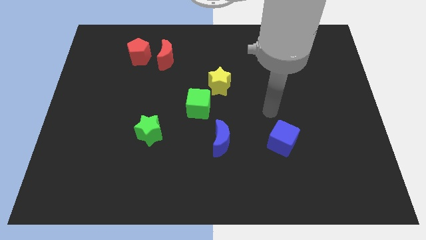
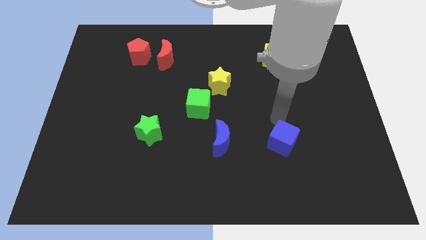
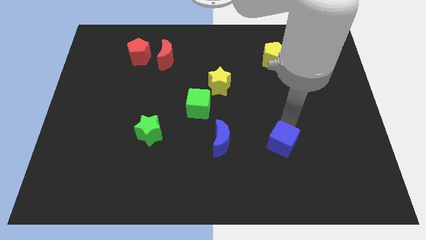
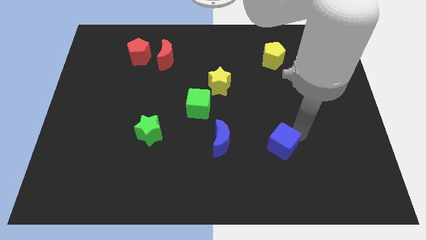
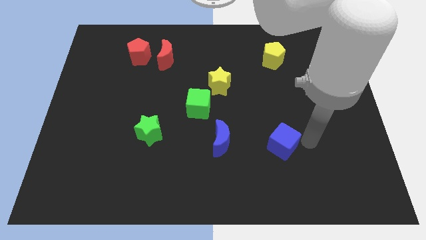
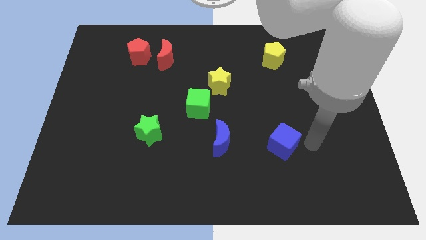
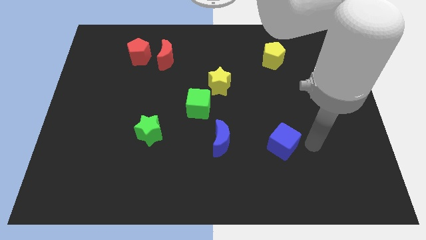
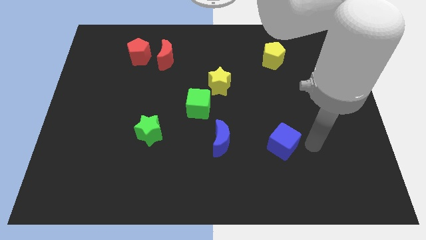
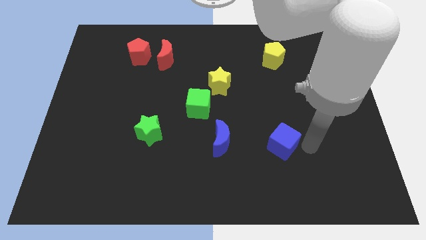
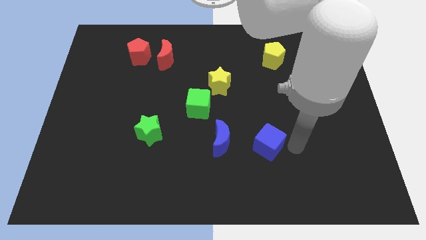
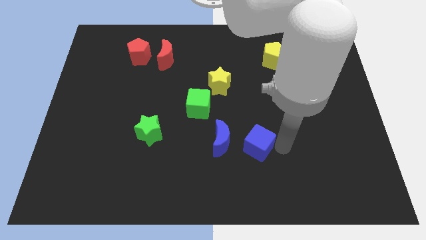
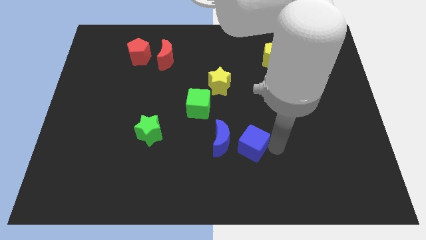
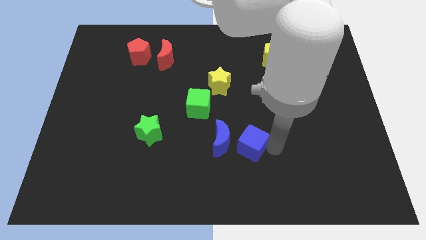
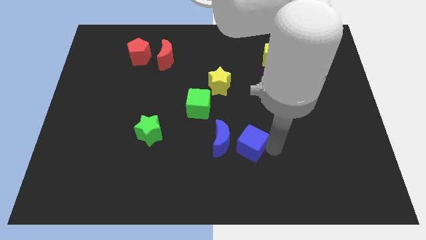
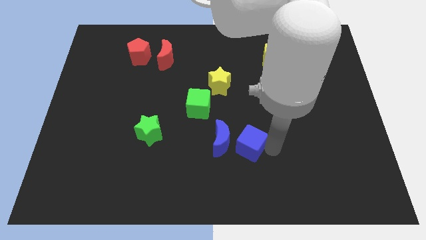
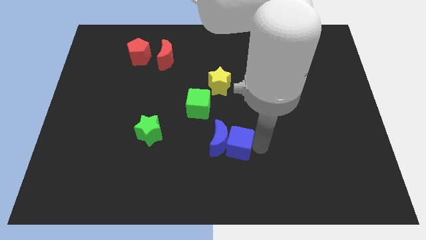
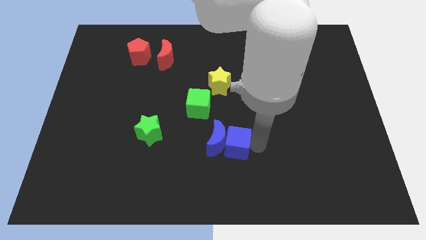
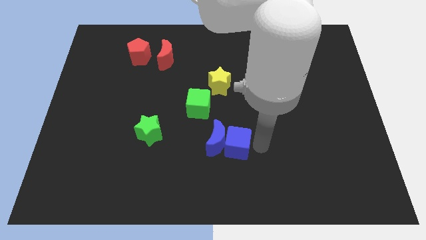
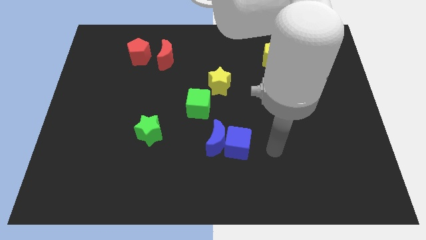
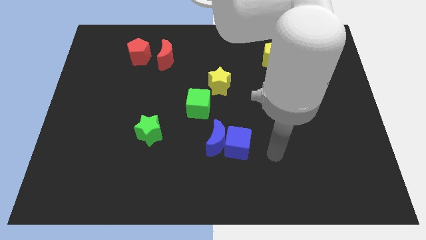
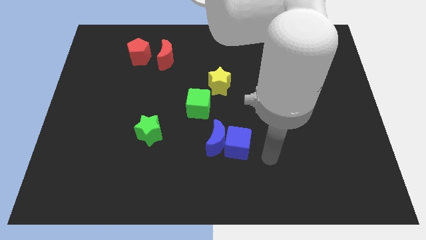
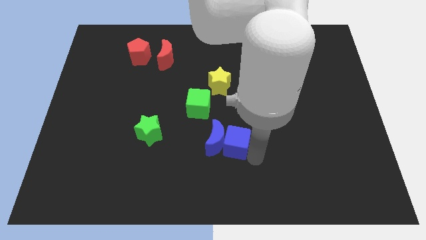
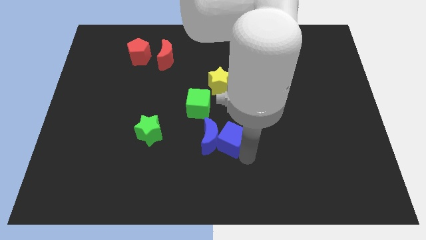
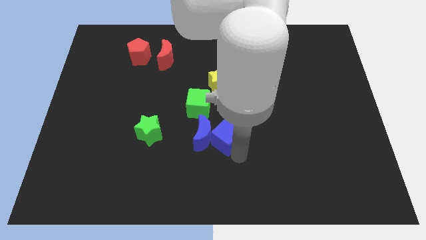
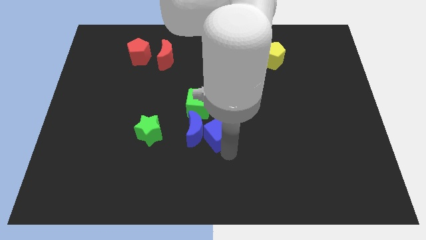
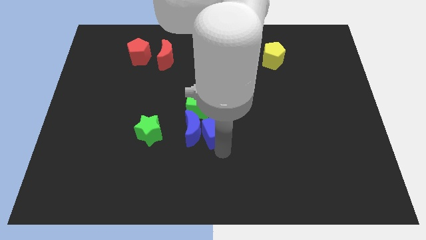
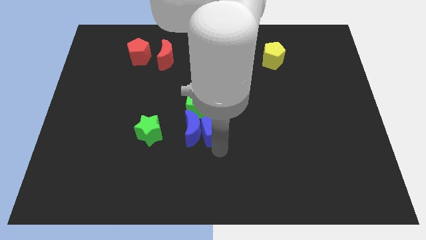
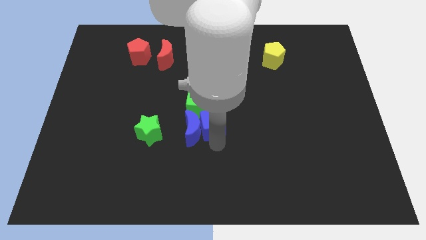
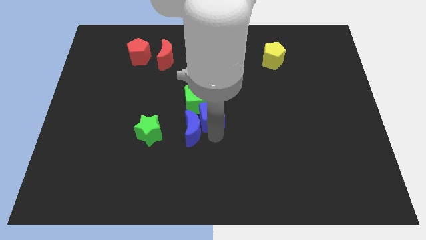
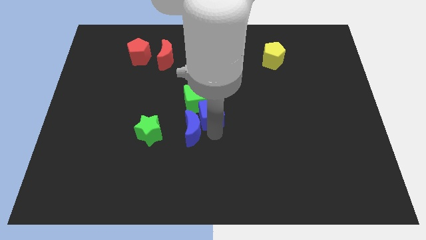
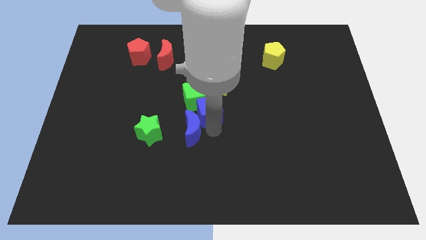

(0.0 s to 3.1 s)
push the blue blocks towards the center

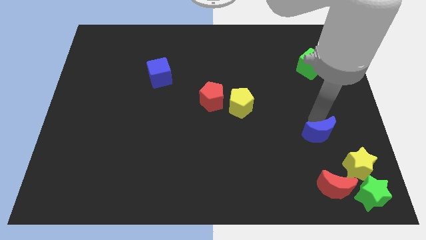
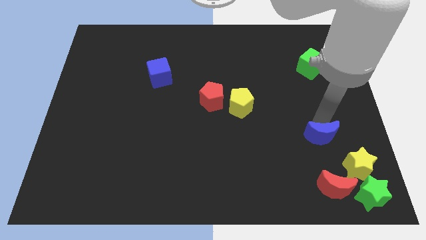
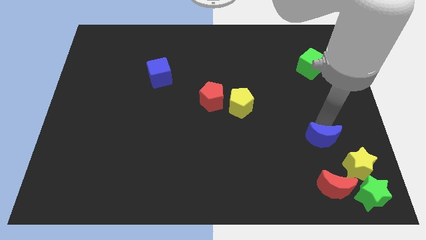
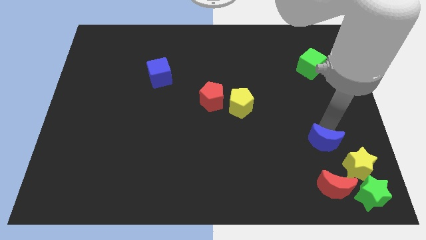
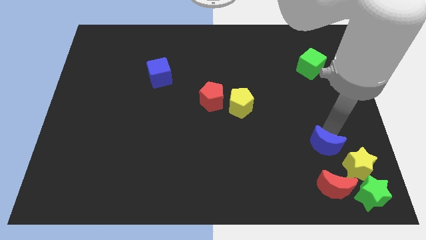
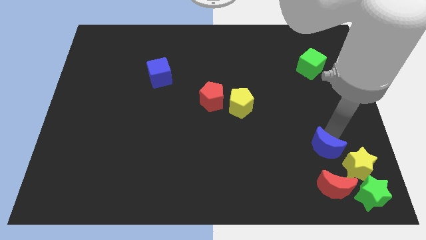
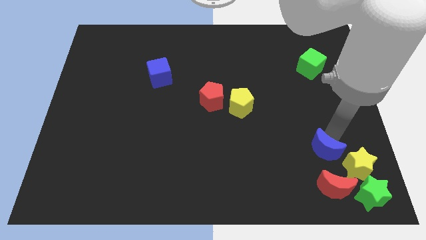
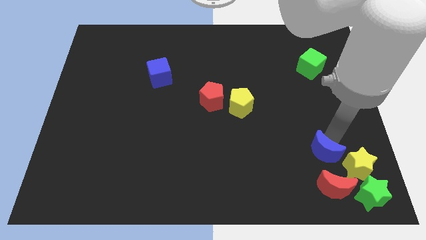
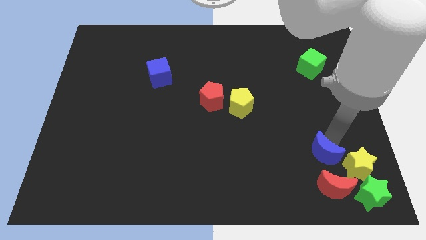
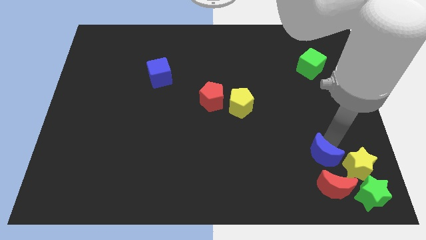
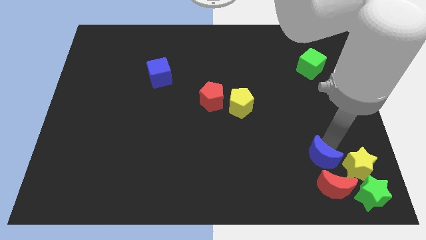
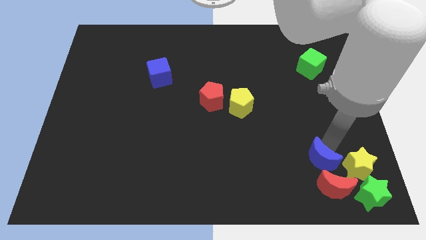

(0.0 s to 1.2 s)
move blue moon to the top of the red moon

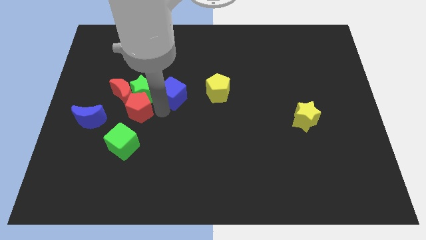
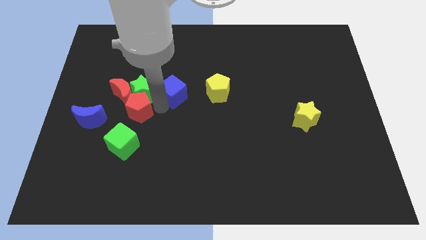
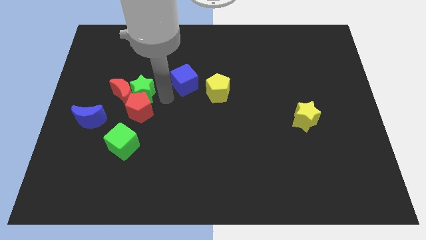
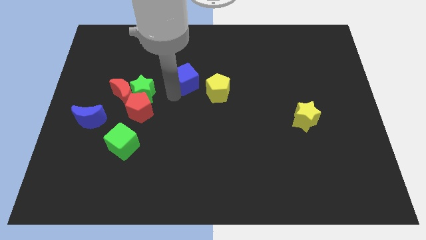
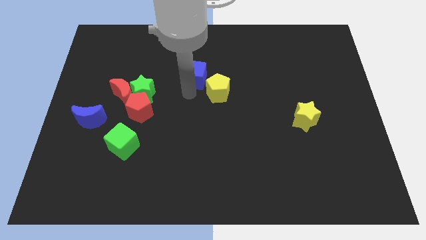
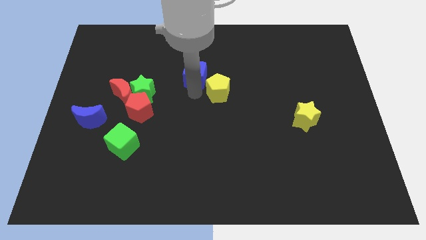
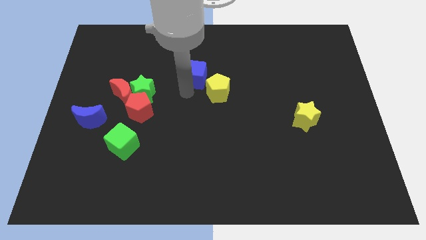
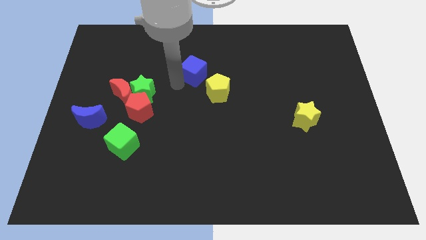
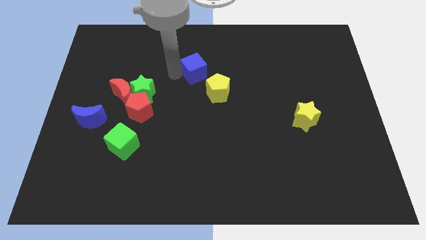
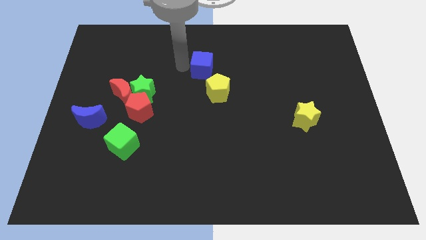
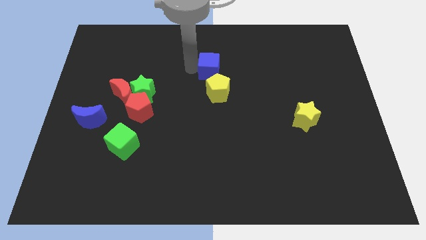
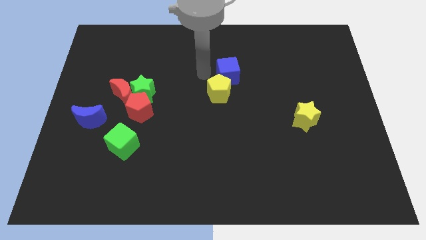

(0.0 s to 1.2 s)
place the blue cube above the yellow pentagon

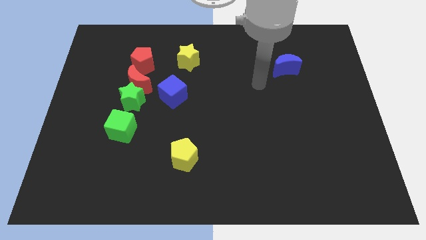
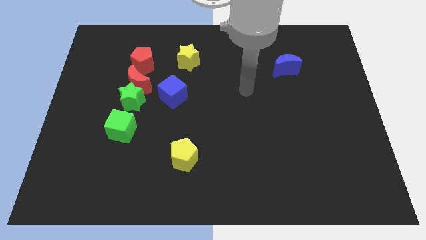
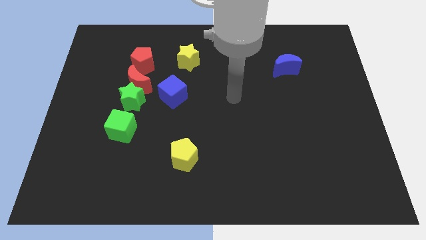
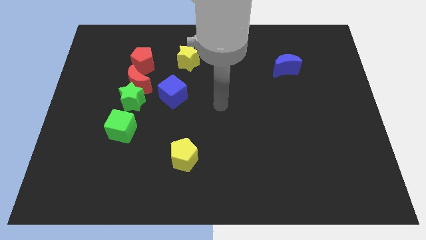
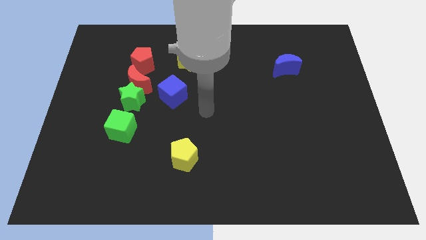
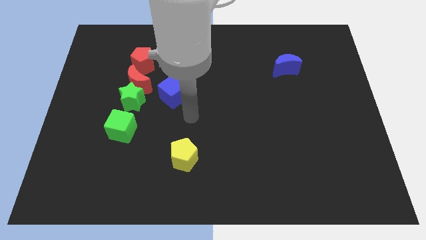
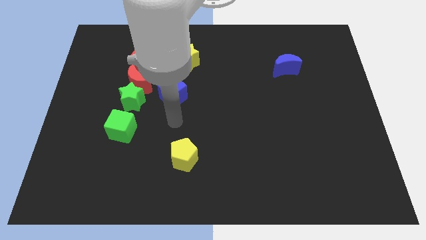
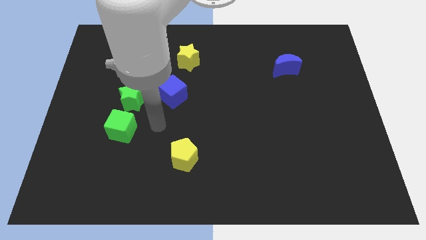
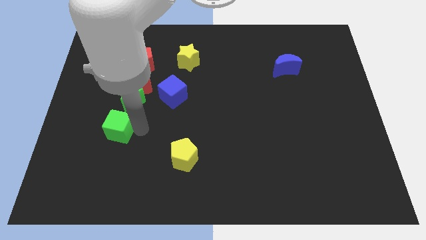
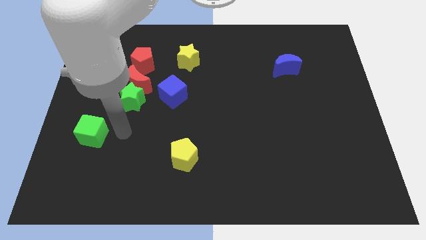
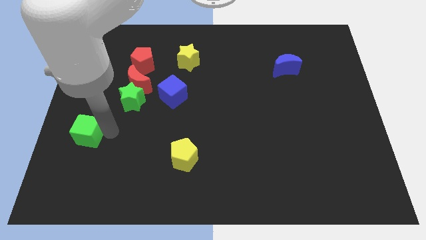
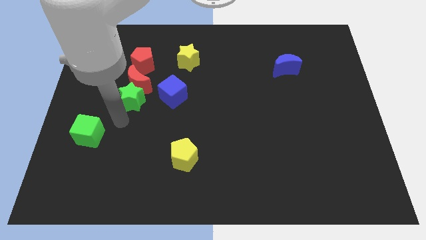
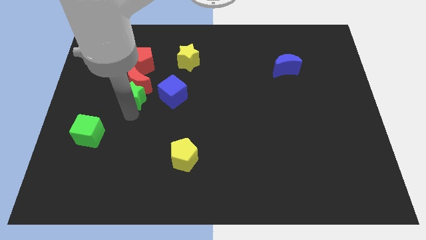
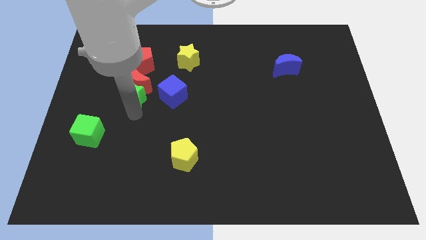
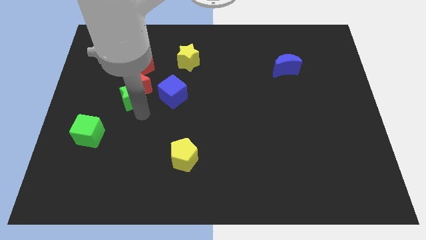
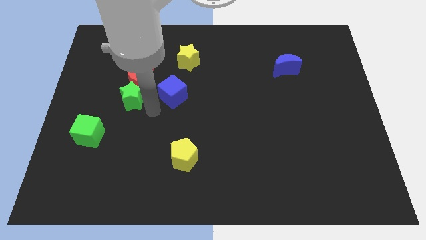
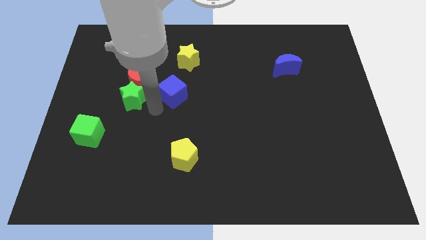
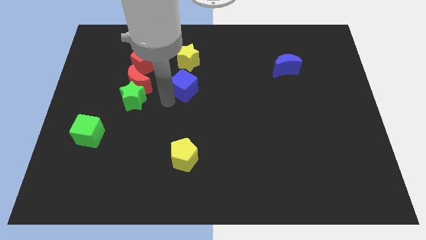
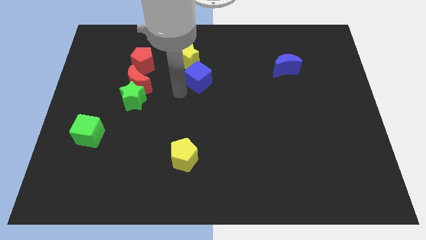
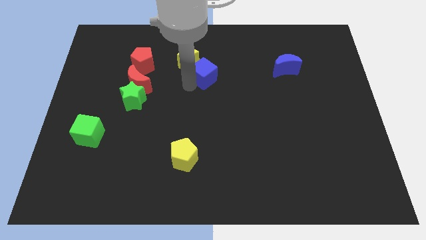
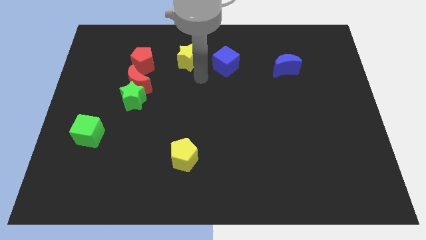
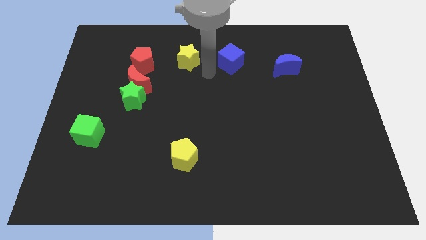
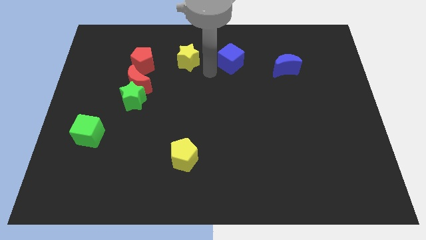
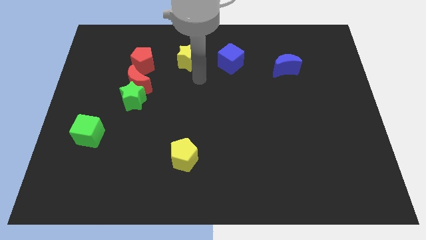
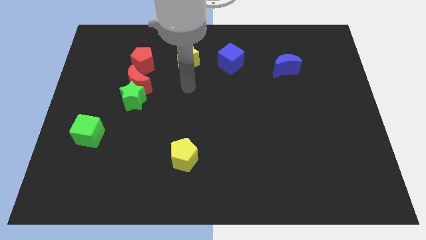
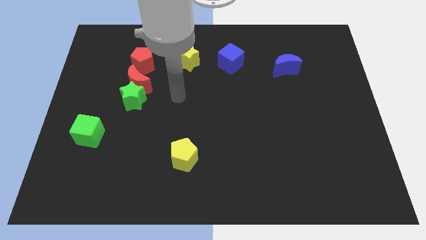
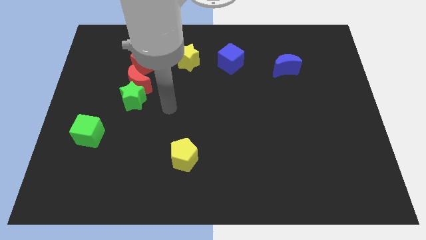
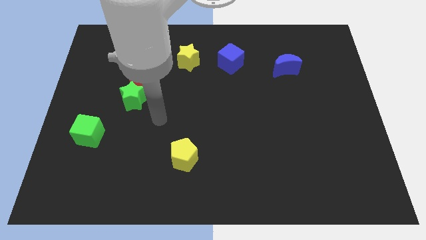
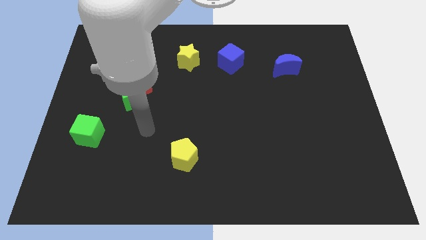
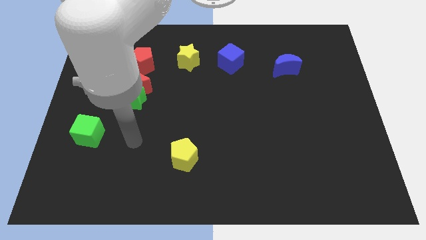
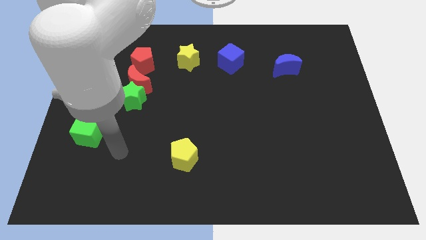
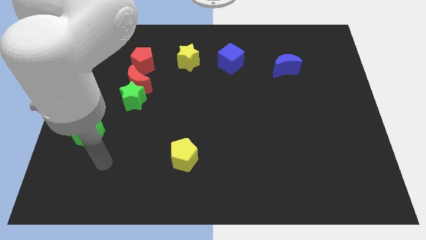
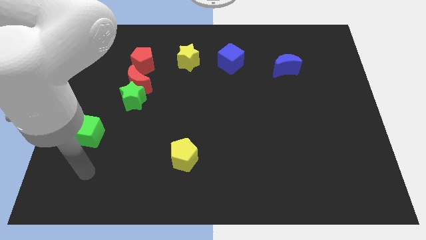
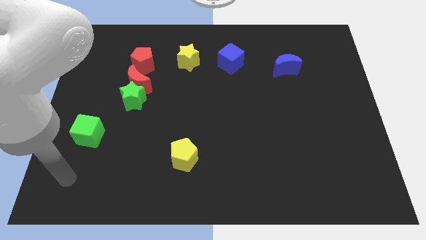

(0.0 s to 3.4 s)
make a diagonal line out of green cube green star and yellow star
